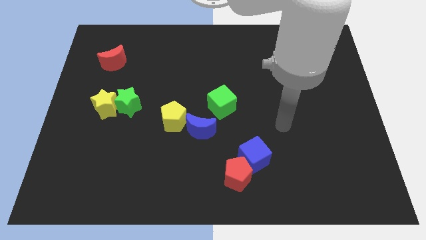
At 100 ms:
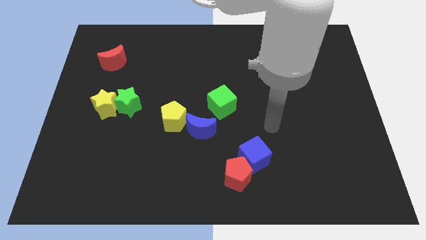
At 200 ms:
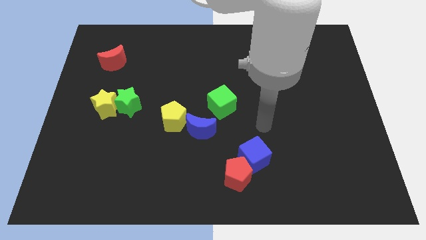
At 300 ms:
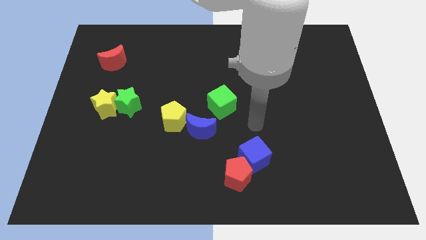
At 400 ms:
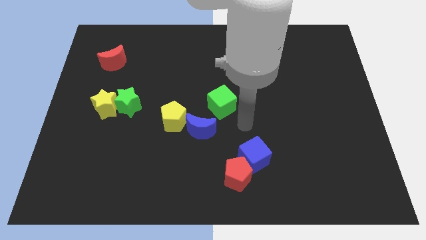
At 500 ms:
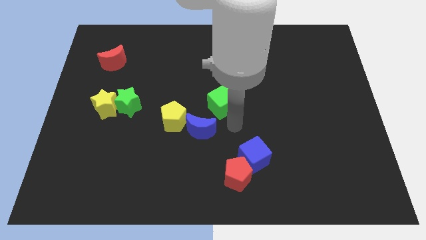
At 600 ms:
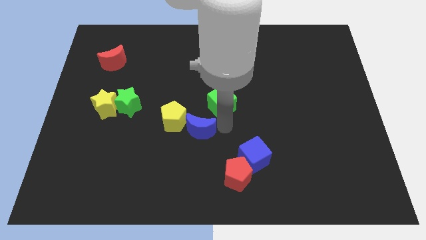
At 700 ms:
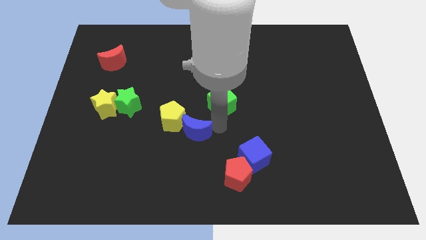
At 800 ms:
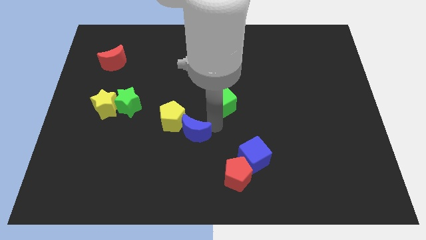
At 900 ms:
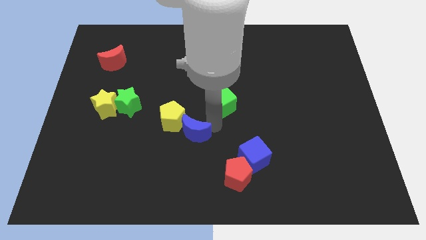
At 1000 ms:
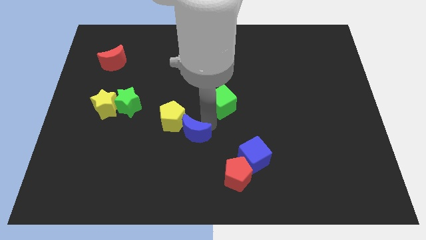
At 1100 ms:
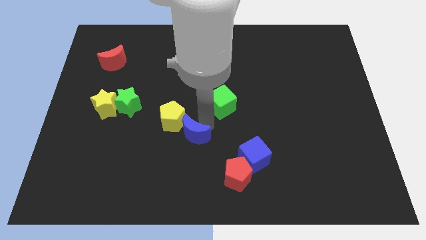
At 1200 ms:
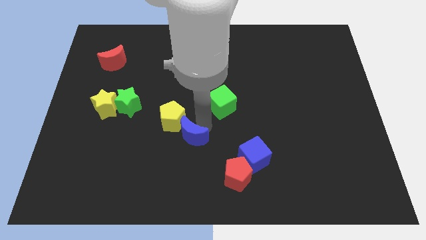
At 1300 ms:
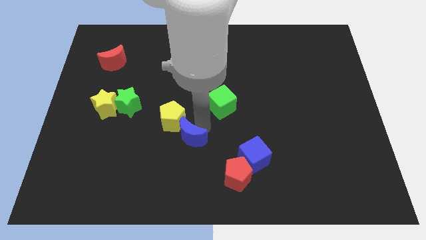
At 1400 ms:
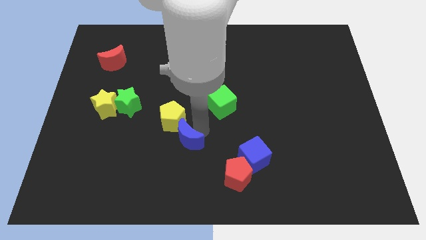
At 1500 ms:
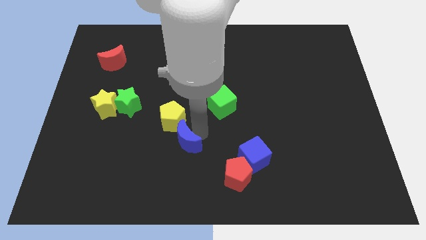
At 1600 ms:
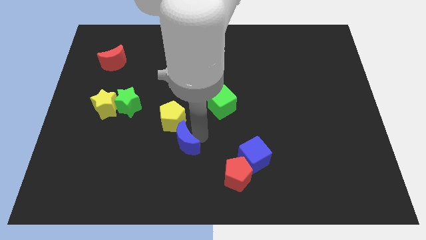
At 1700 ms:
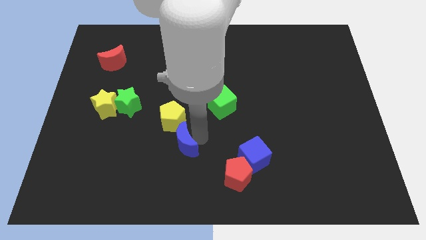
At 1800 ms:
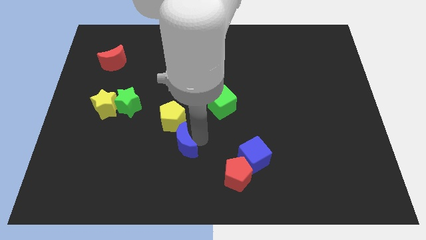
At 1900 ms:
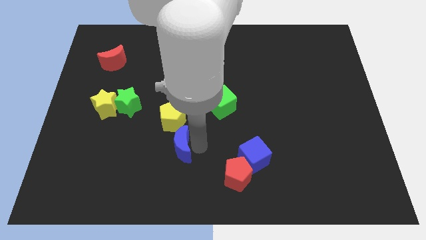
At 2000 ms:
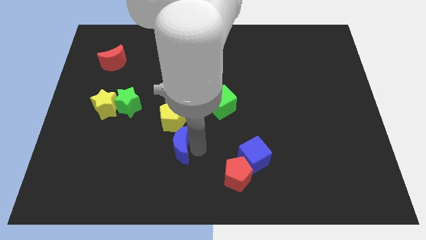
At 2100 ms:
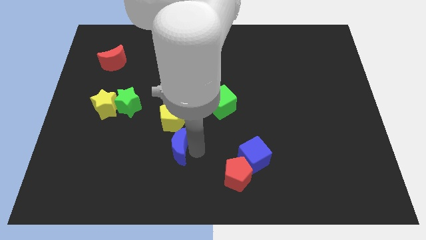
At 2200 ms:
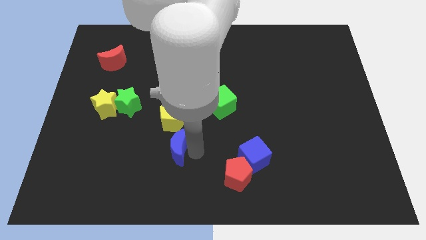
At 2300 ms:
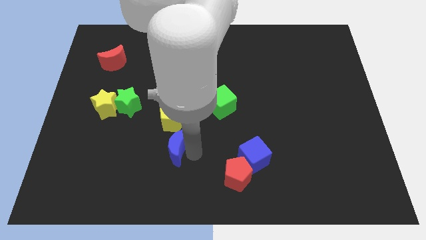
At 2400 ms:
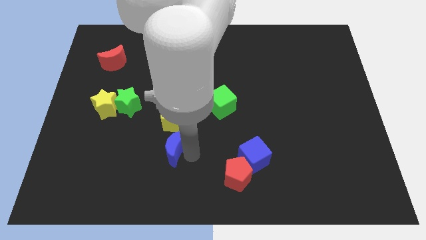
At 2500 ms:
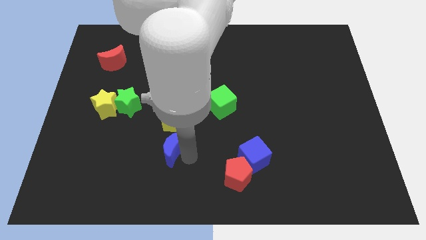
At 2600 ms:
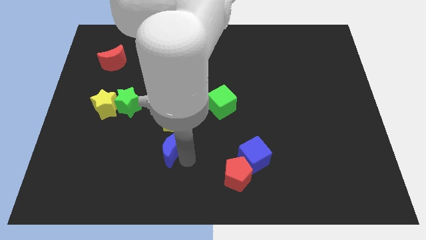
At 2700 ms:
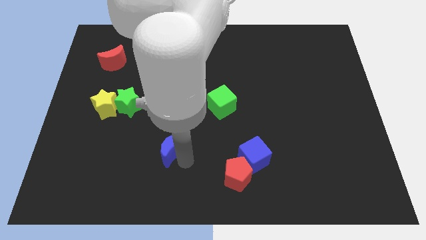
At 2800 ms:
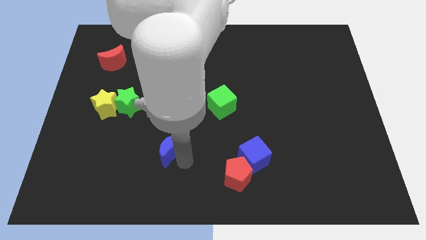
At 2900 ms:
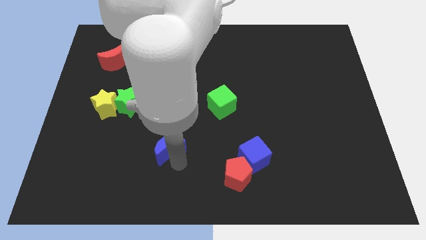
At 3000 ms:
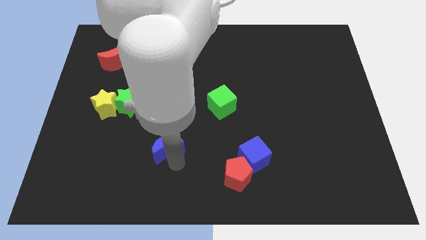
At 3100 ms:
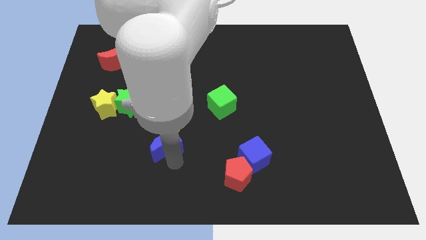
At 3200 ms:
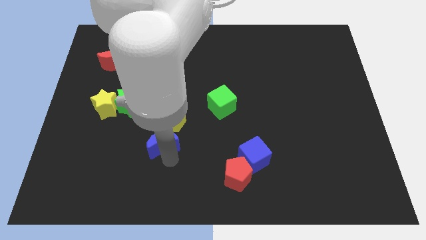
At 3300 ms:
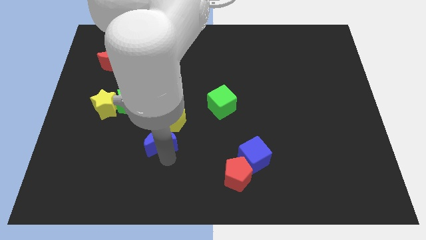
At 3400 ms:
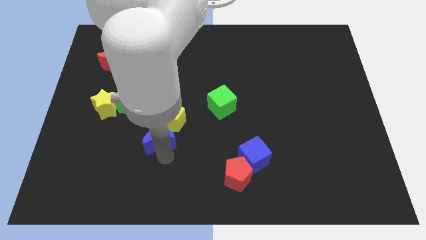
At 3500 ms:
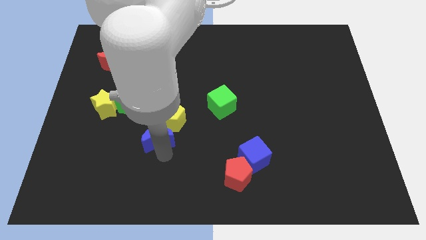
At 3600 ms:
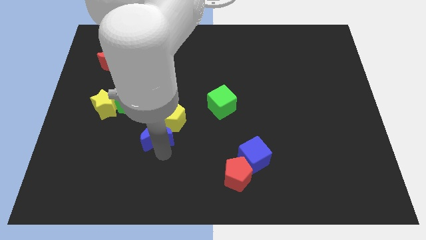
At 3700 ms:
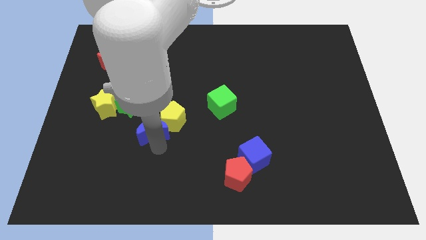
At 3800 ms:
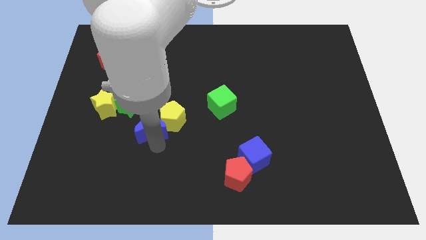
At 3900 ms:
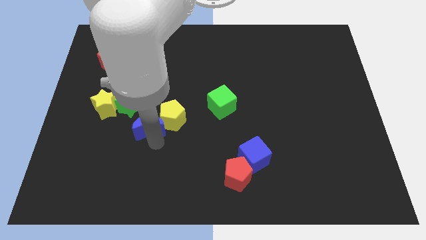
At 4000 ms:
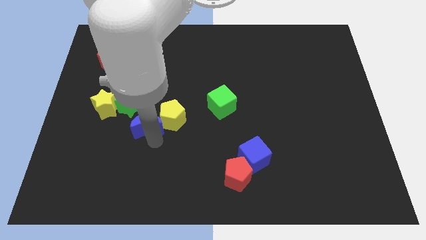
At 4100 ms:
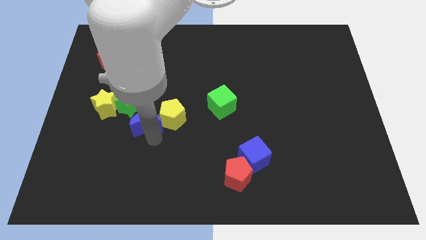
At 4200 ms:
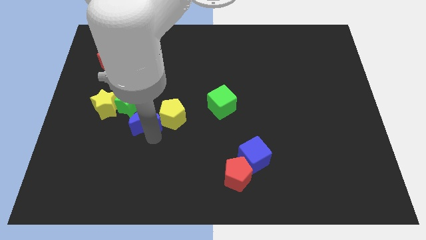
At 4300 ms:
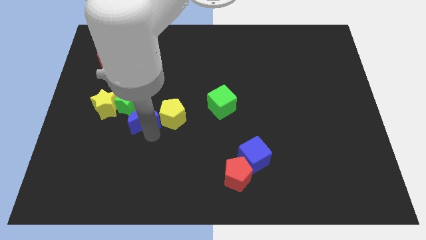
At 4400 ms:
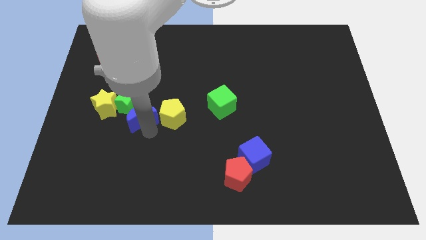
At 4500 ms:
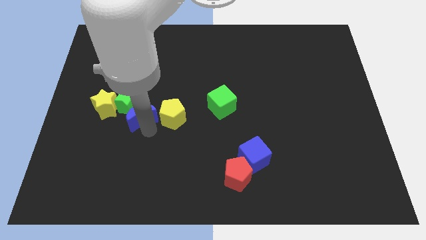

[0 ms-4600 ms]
slide the blue moon close to the green star

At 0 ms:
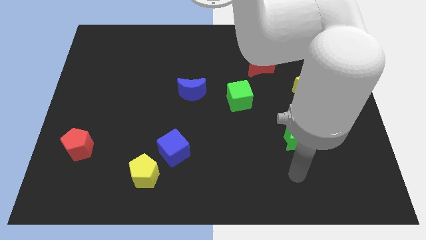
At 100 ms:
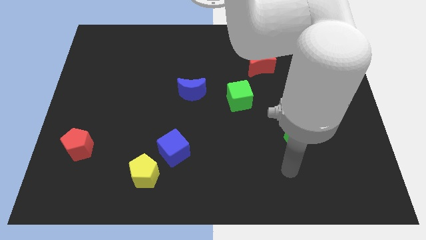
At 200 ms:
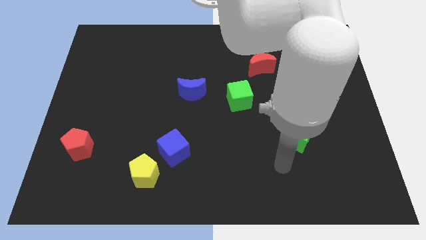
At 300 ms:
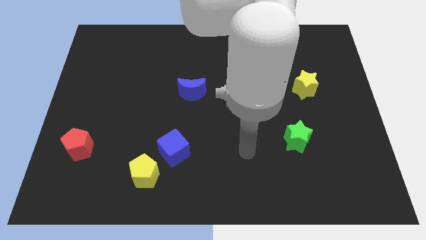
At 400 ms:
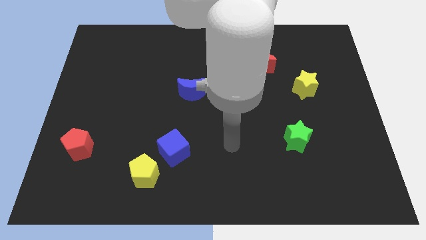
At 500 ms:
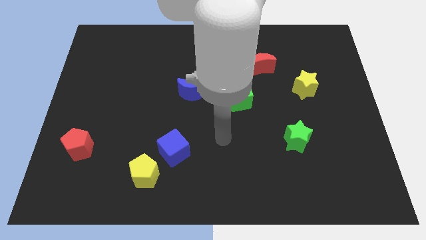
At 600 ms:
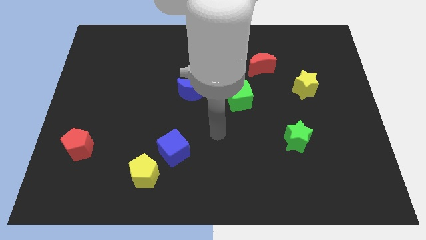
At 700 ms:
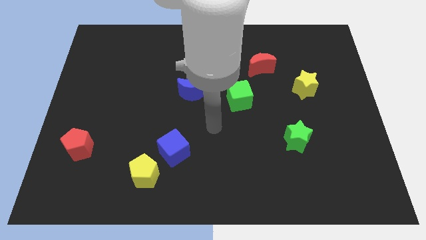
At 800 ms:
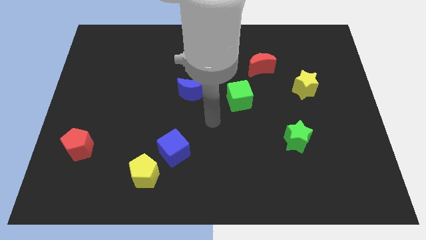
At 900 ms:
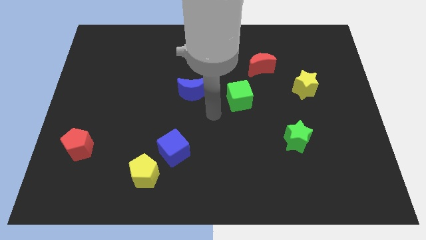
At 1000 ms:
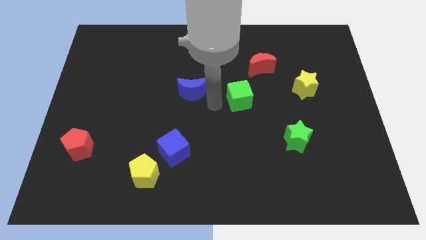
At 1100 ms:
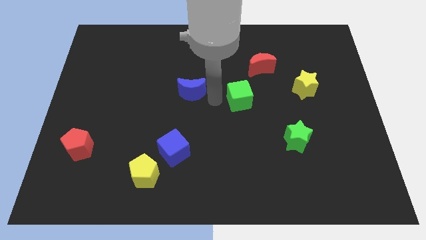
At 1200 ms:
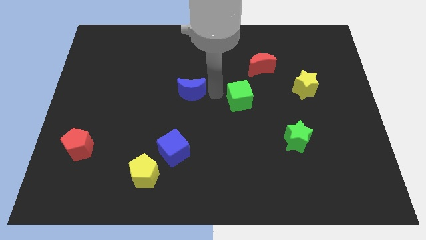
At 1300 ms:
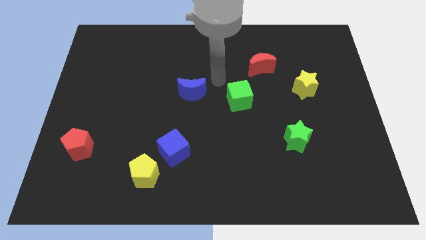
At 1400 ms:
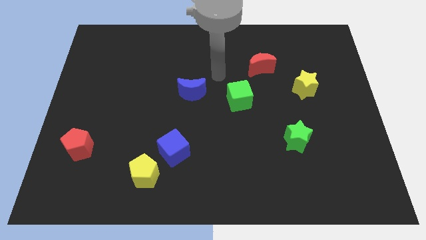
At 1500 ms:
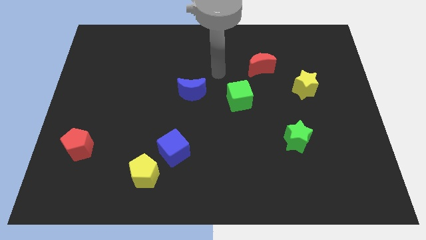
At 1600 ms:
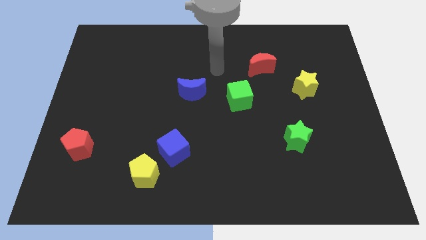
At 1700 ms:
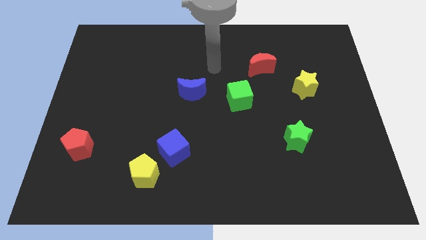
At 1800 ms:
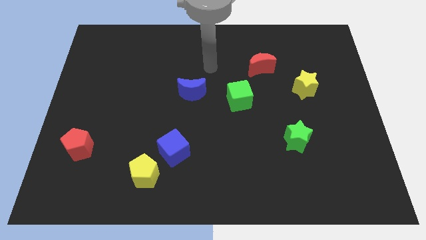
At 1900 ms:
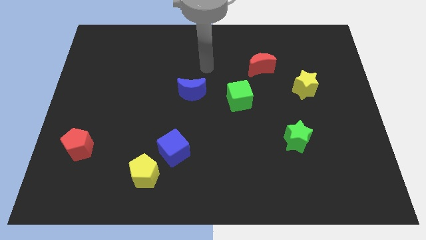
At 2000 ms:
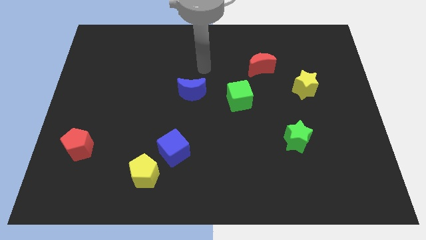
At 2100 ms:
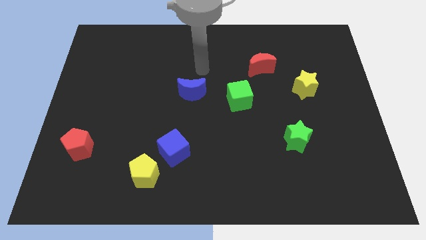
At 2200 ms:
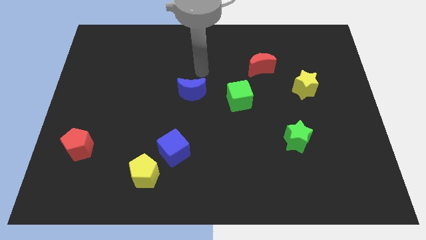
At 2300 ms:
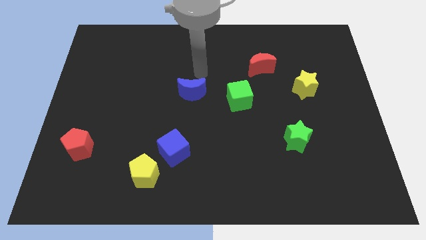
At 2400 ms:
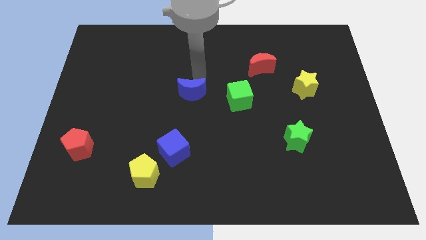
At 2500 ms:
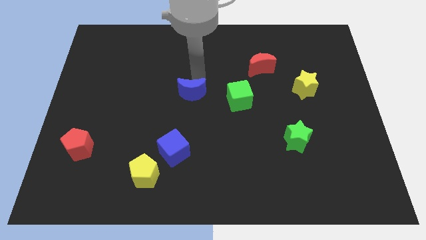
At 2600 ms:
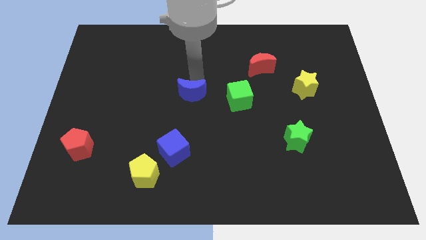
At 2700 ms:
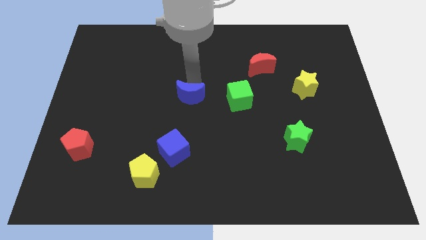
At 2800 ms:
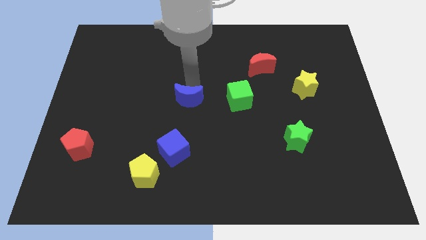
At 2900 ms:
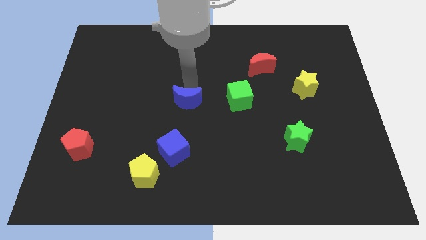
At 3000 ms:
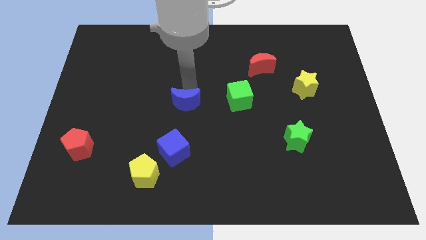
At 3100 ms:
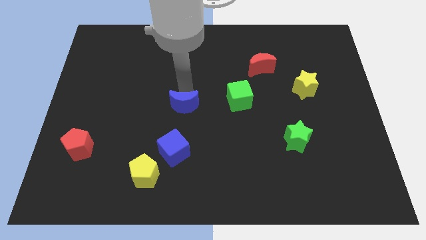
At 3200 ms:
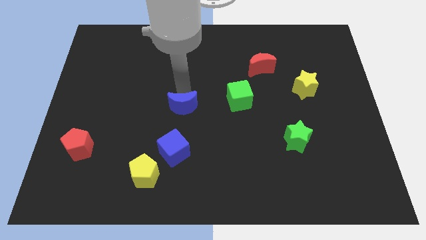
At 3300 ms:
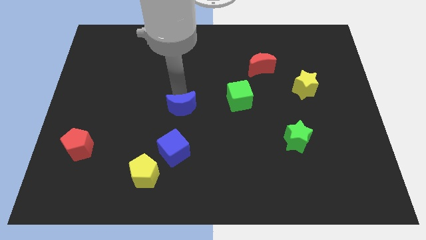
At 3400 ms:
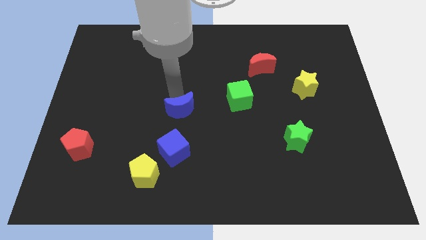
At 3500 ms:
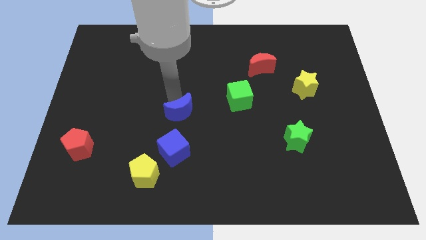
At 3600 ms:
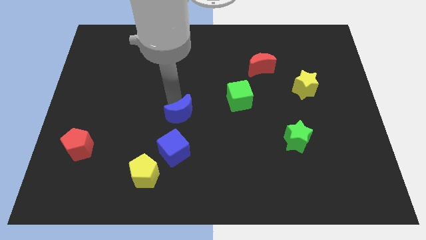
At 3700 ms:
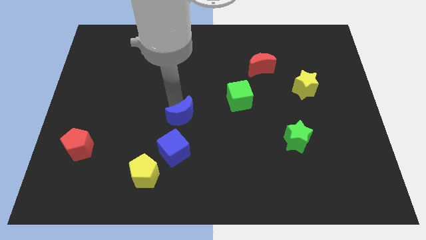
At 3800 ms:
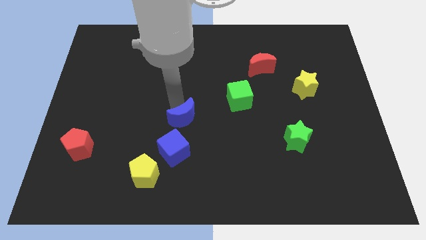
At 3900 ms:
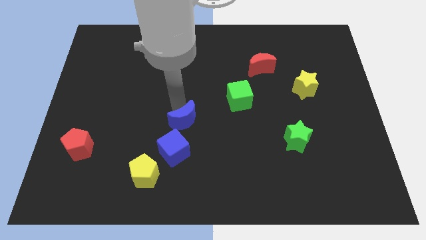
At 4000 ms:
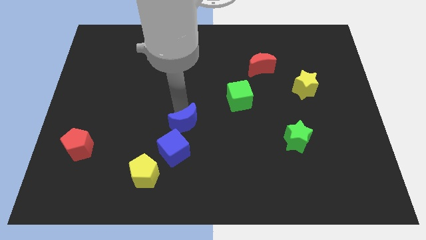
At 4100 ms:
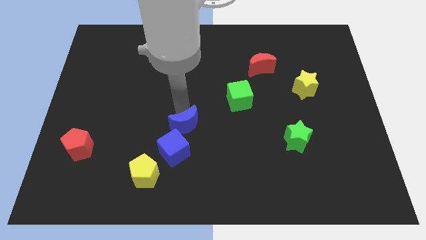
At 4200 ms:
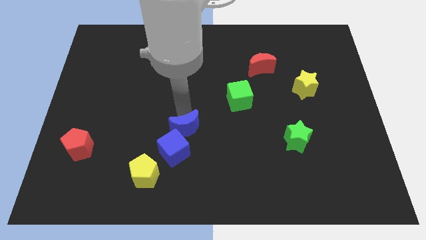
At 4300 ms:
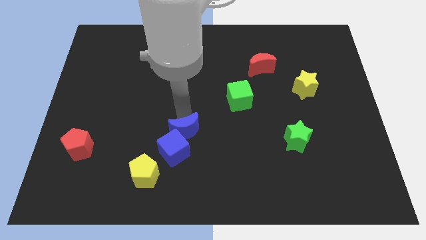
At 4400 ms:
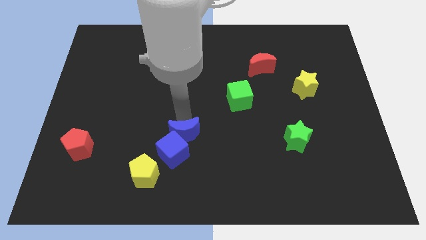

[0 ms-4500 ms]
put the blue moon towards the blue cube
